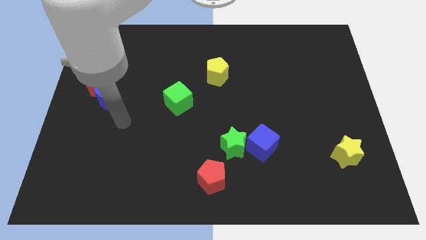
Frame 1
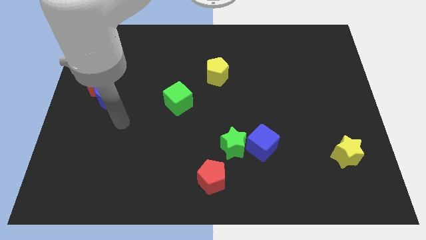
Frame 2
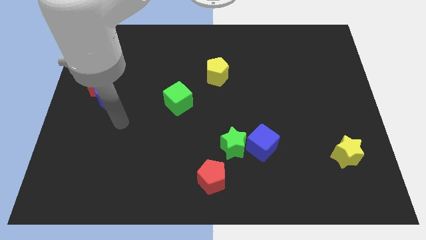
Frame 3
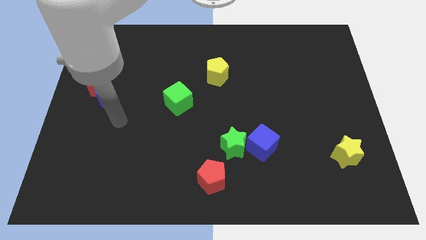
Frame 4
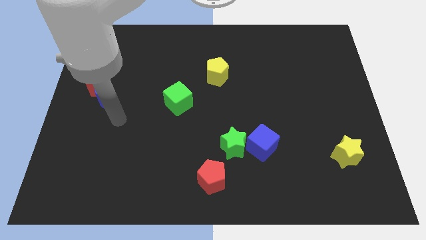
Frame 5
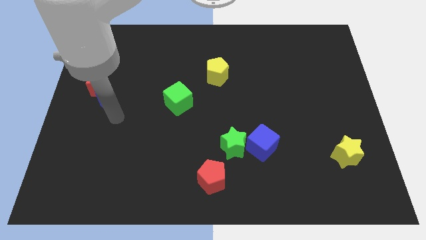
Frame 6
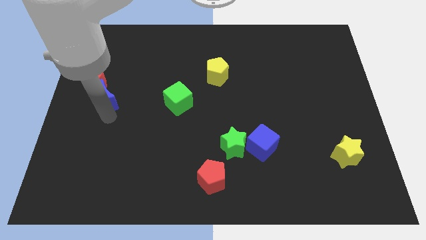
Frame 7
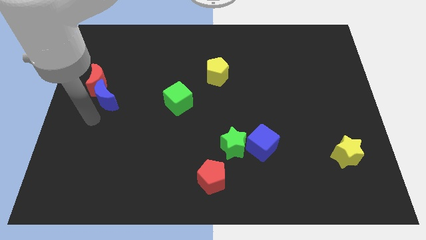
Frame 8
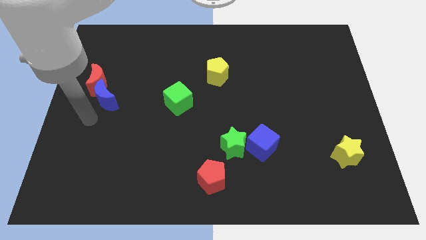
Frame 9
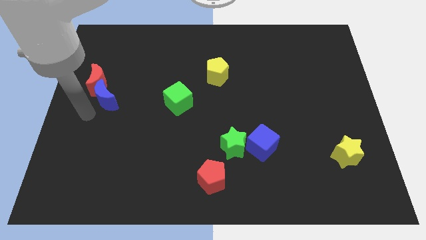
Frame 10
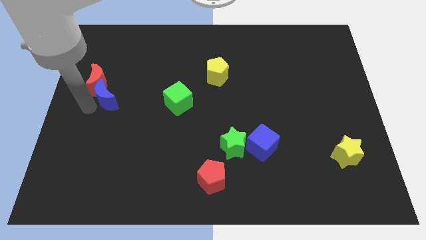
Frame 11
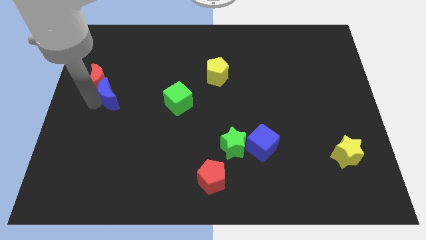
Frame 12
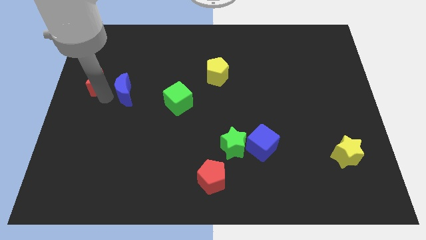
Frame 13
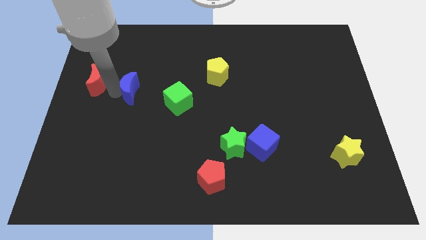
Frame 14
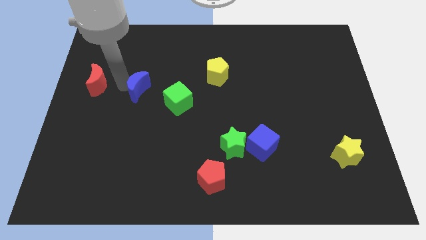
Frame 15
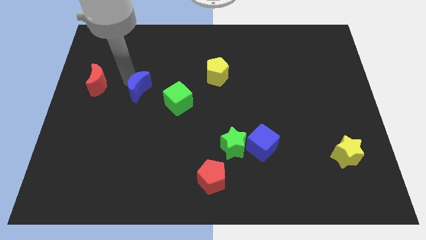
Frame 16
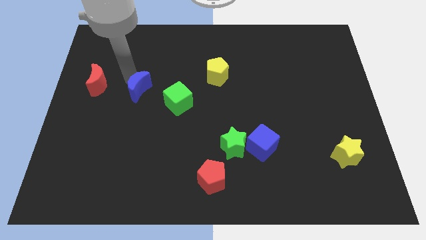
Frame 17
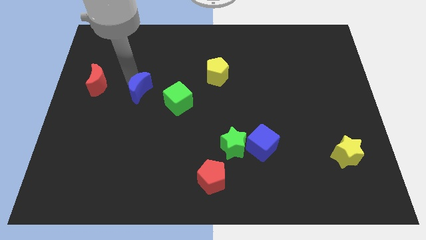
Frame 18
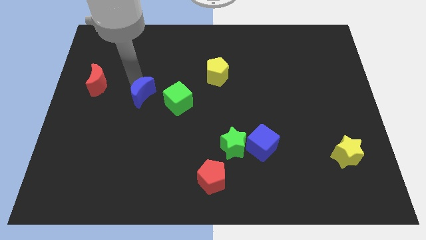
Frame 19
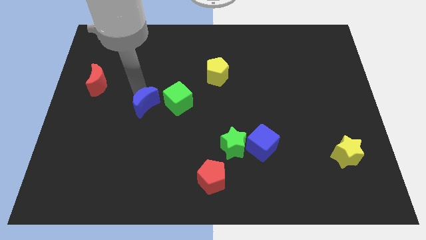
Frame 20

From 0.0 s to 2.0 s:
separate the red crescent and blue crescent

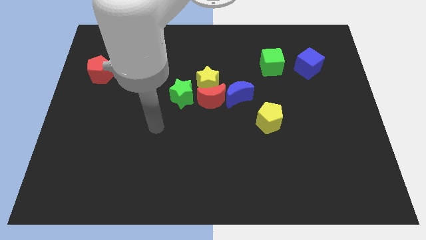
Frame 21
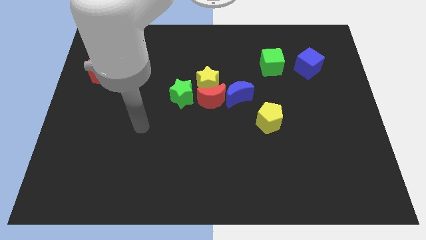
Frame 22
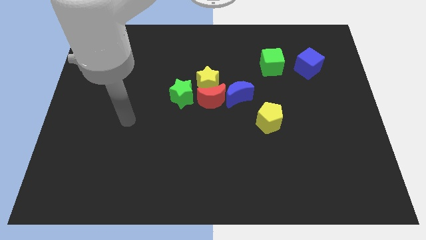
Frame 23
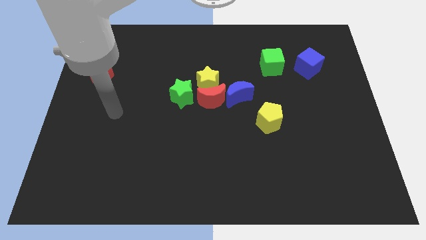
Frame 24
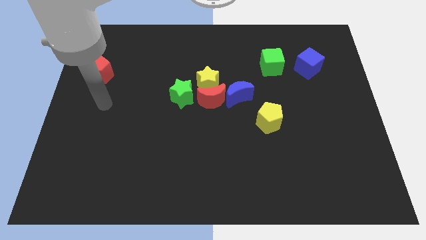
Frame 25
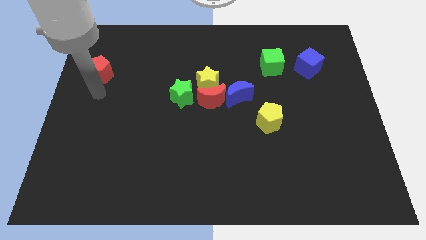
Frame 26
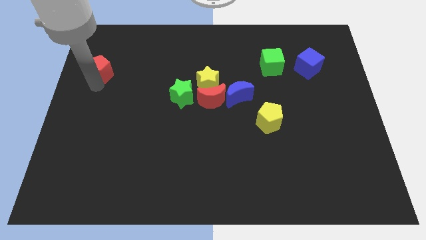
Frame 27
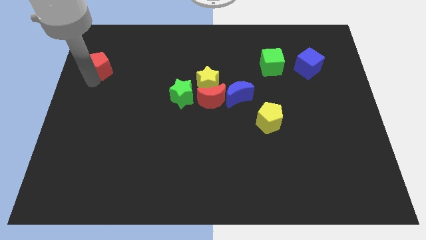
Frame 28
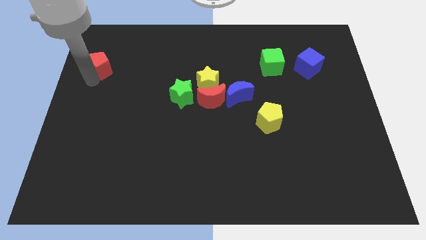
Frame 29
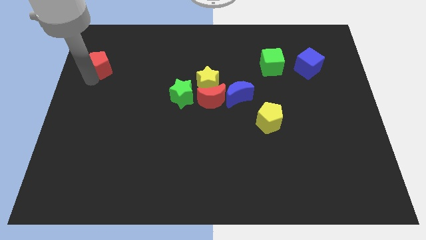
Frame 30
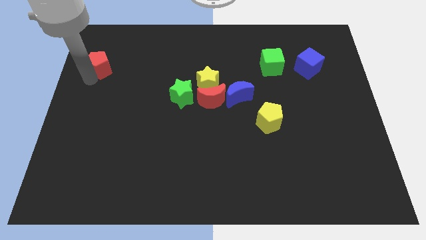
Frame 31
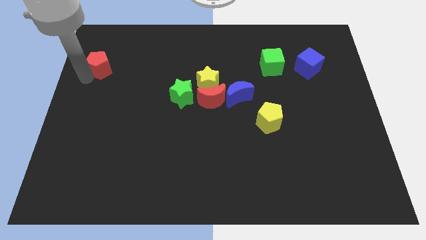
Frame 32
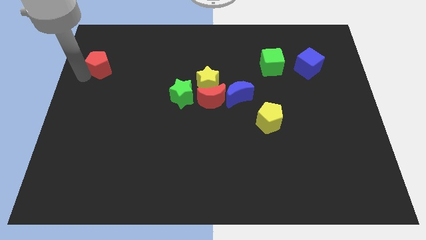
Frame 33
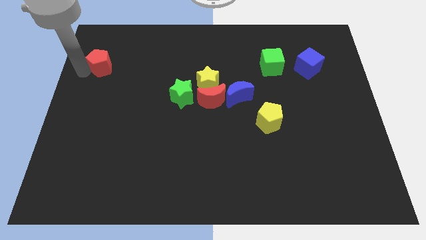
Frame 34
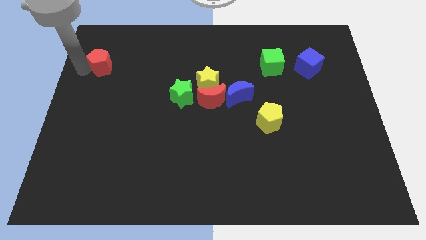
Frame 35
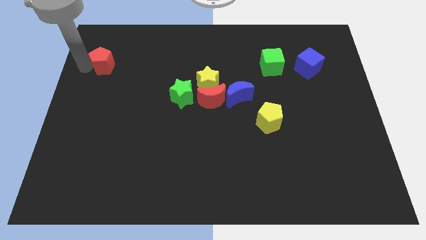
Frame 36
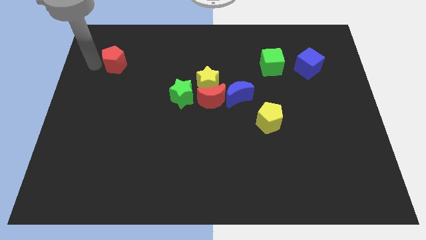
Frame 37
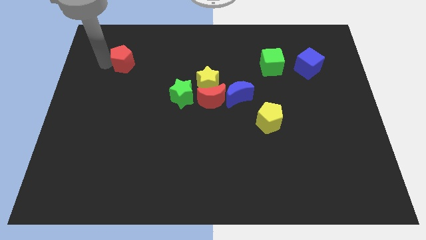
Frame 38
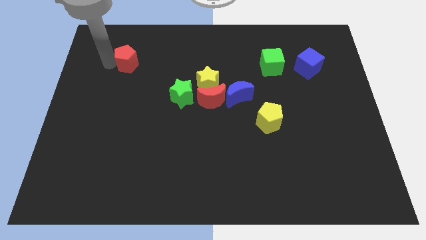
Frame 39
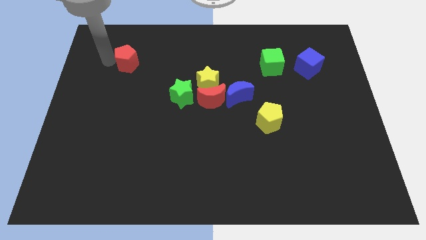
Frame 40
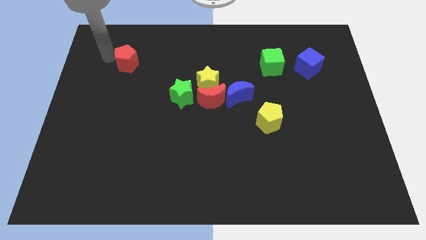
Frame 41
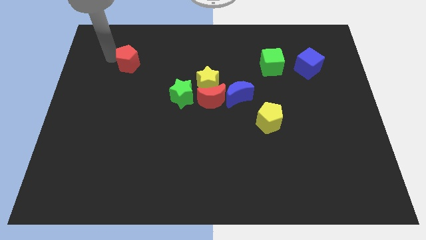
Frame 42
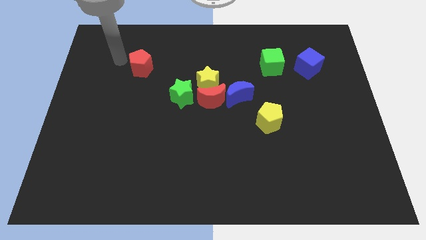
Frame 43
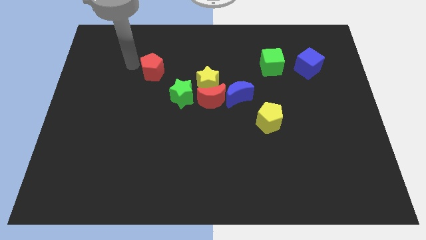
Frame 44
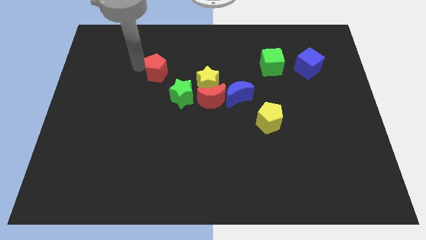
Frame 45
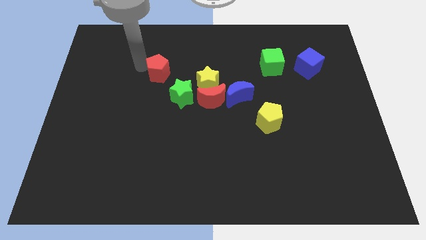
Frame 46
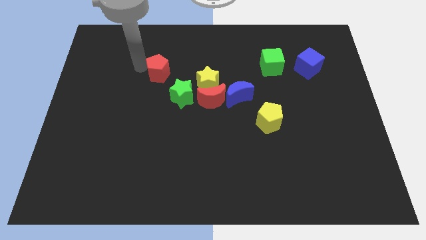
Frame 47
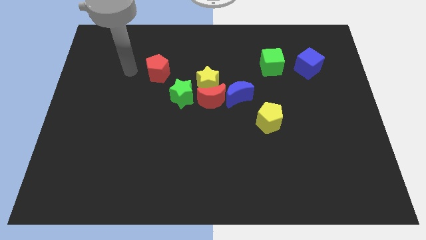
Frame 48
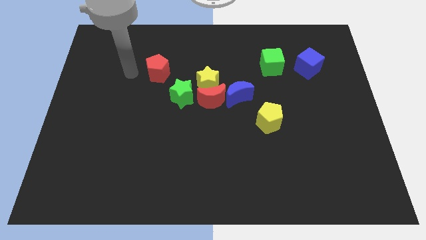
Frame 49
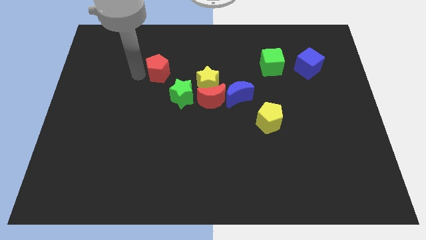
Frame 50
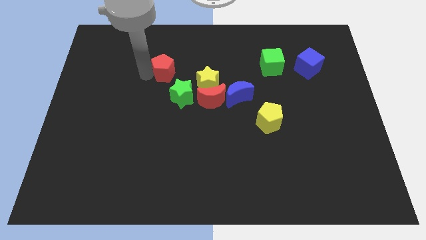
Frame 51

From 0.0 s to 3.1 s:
drag red pentagon to top left of the green star

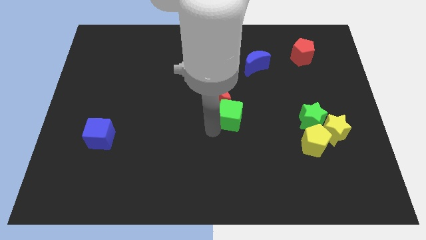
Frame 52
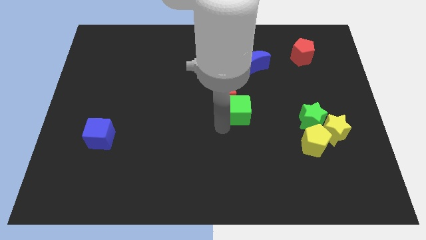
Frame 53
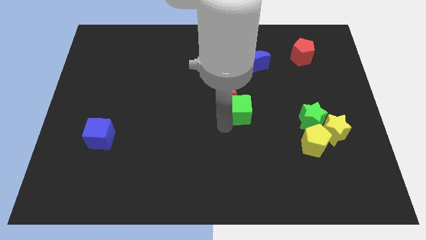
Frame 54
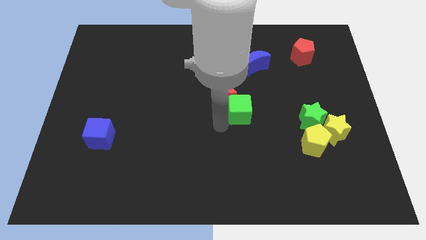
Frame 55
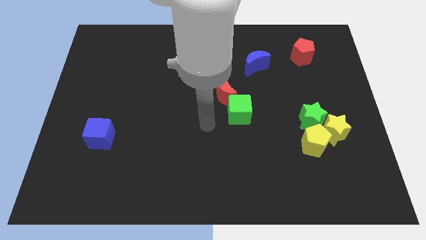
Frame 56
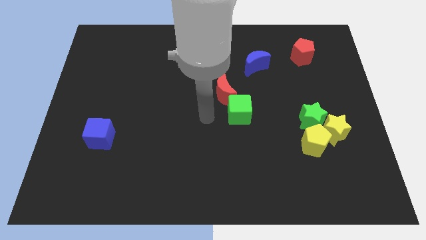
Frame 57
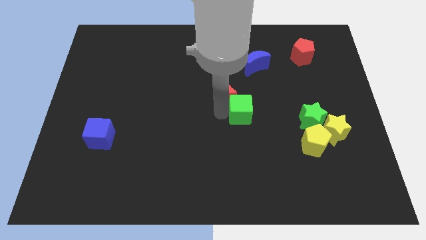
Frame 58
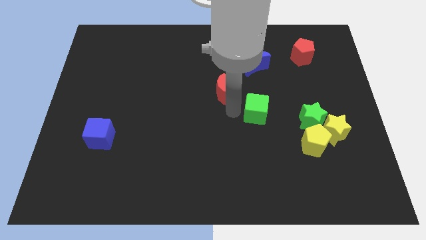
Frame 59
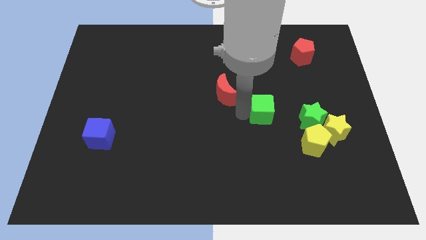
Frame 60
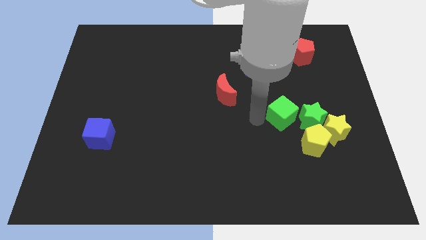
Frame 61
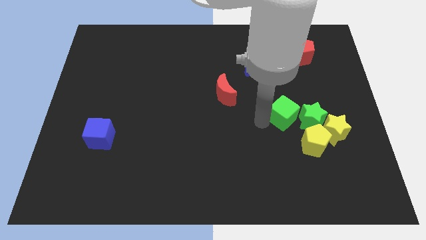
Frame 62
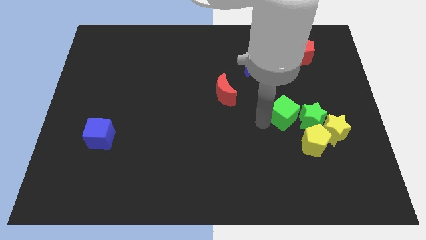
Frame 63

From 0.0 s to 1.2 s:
slide the green cube close to the left side of the green star

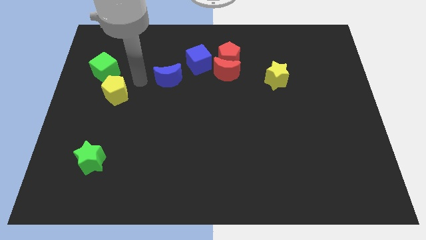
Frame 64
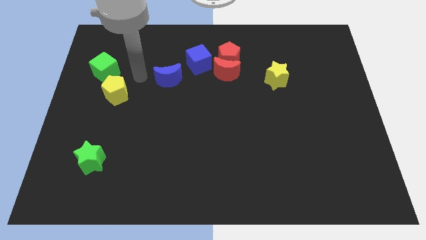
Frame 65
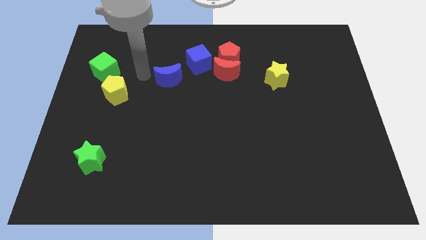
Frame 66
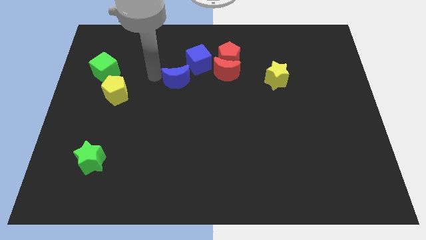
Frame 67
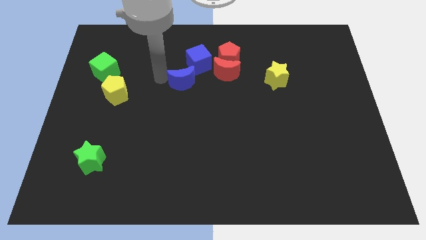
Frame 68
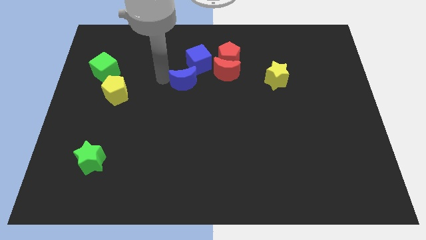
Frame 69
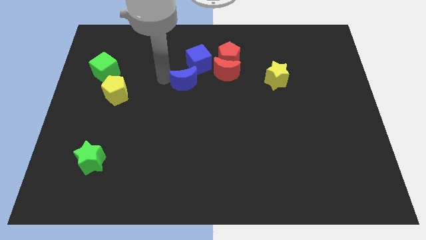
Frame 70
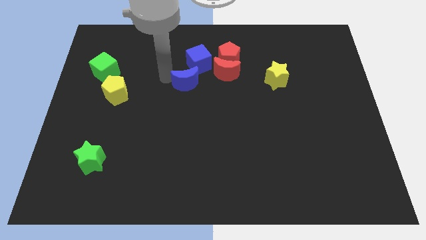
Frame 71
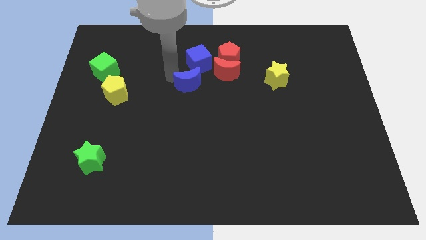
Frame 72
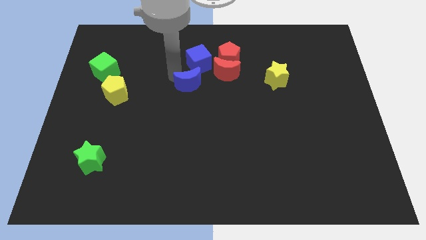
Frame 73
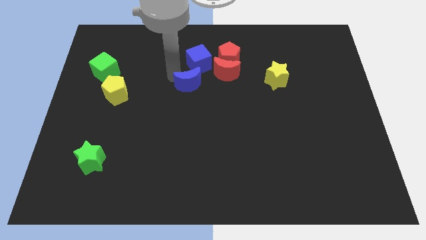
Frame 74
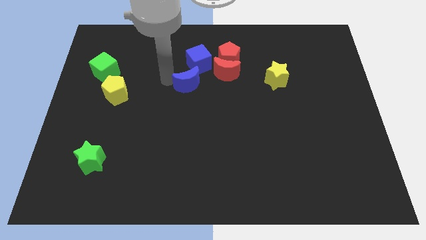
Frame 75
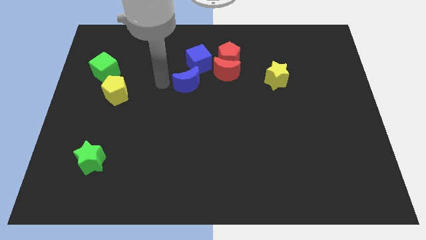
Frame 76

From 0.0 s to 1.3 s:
slightly push the blue moon towards the center of the board

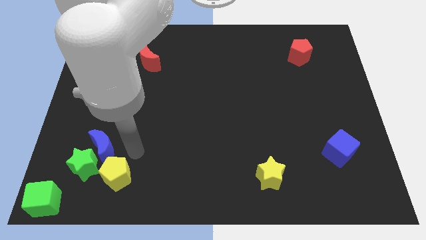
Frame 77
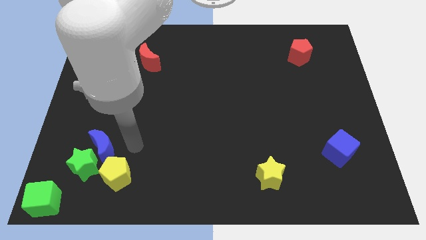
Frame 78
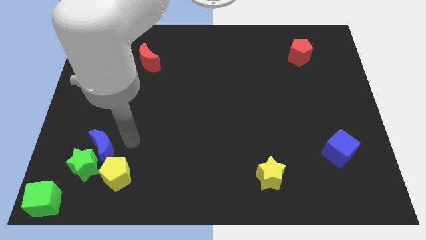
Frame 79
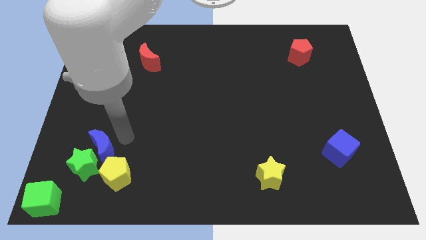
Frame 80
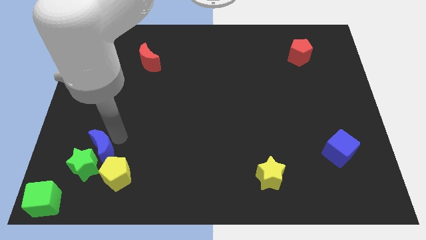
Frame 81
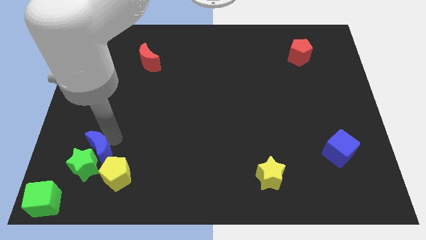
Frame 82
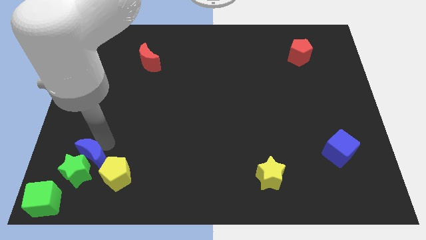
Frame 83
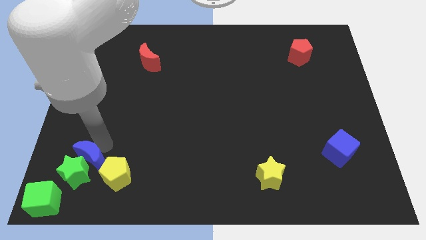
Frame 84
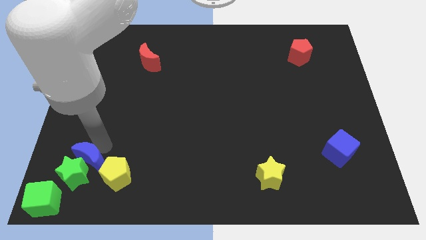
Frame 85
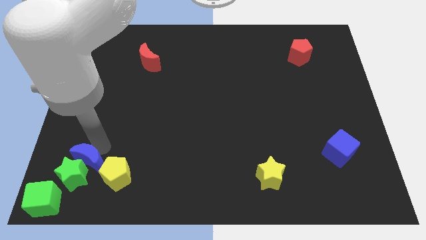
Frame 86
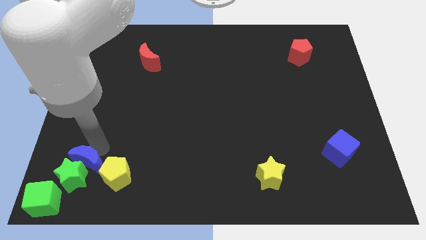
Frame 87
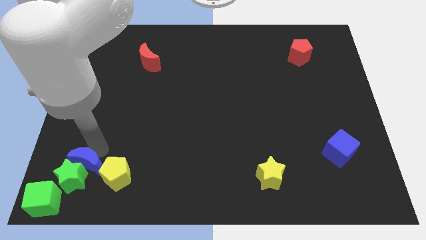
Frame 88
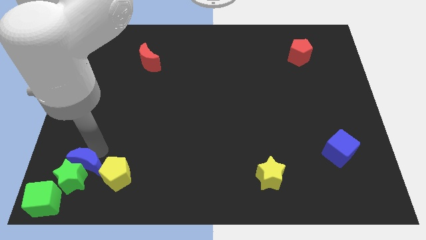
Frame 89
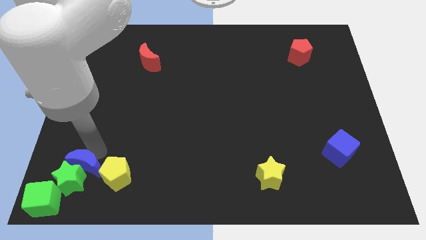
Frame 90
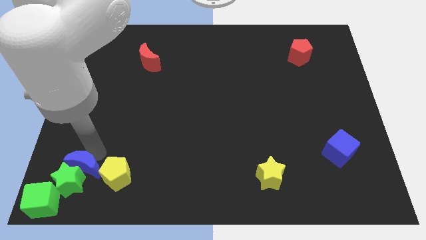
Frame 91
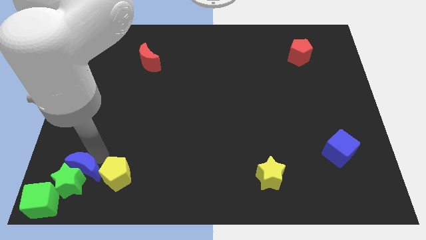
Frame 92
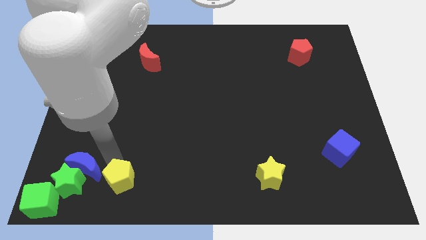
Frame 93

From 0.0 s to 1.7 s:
push blue crescent into the green star
